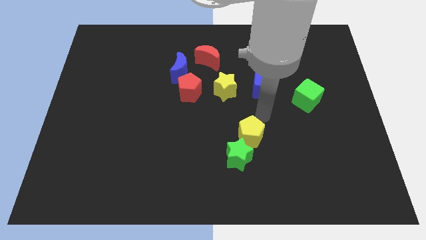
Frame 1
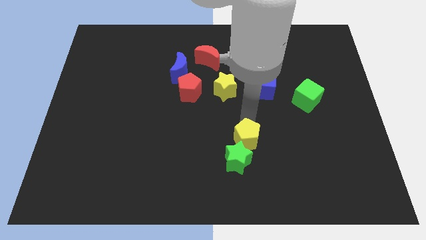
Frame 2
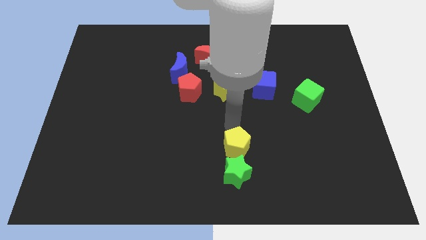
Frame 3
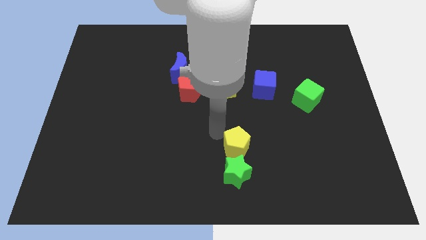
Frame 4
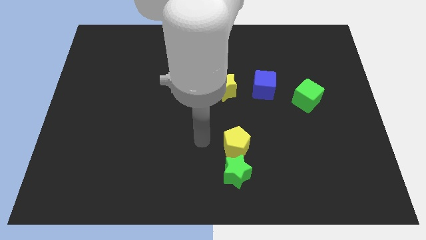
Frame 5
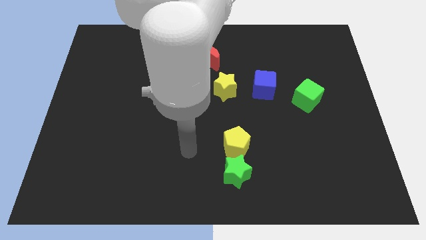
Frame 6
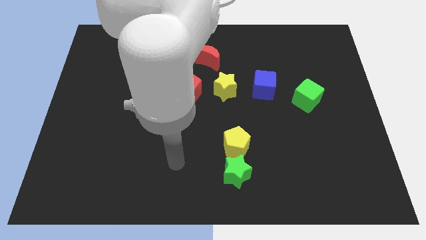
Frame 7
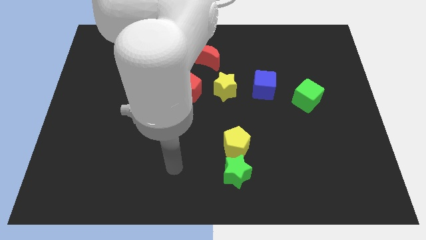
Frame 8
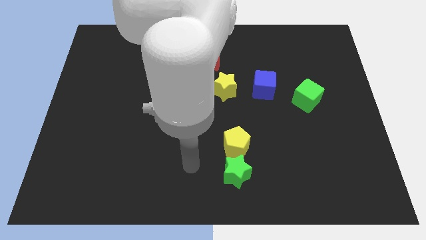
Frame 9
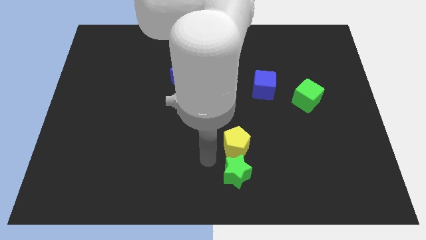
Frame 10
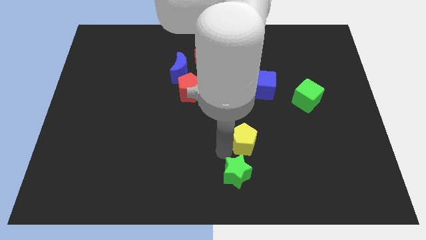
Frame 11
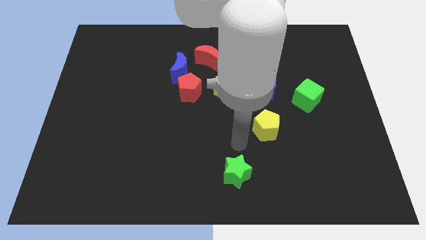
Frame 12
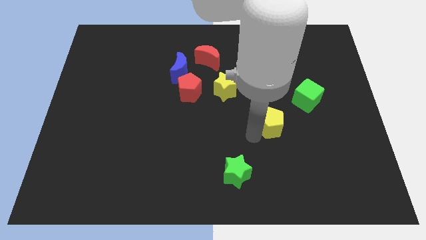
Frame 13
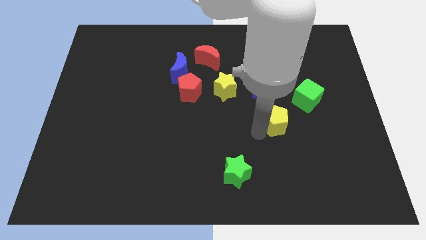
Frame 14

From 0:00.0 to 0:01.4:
separate the yellow pentagon away from the green star

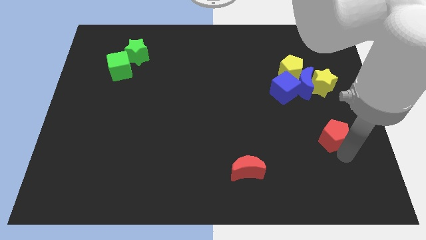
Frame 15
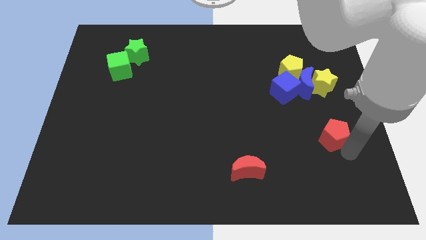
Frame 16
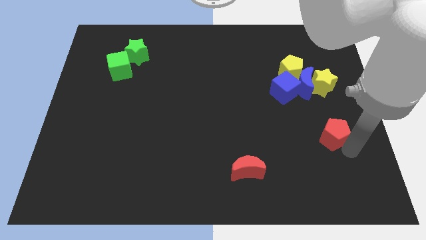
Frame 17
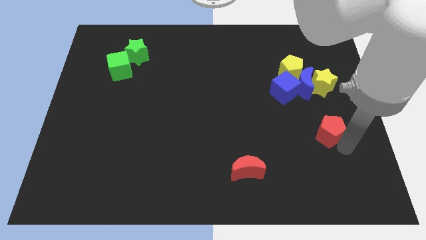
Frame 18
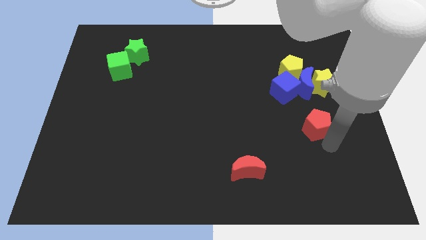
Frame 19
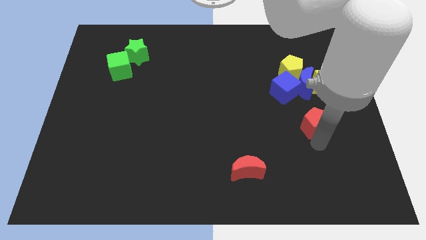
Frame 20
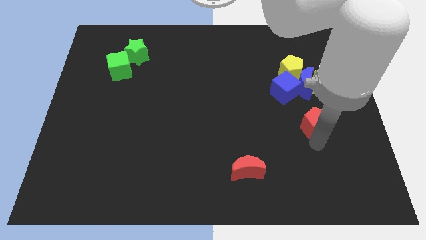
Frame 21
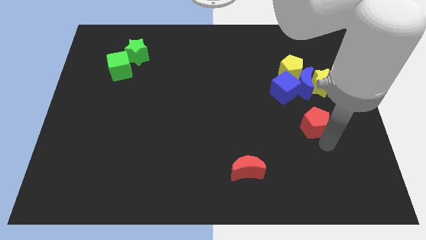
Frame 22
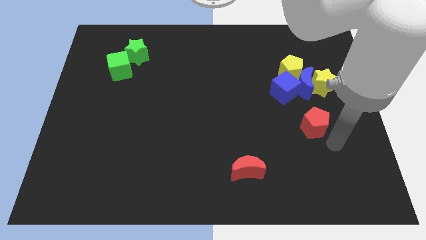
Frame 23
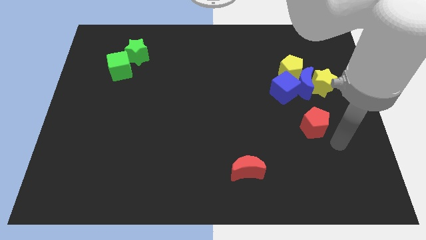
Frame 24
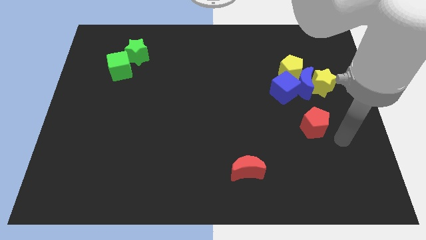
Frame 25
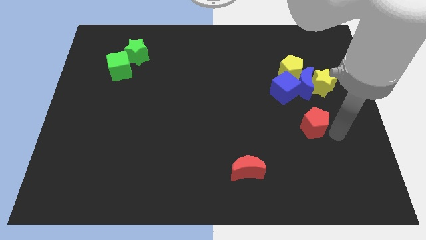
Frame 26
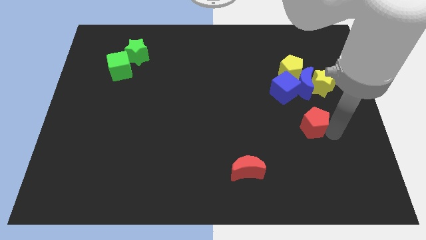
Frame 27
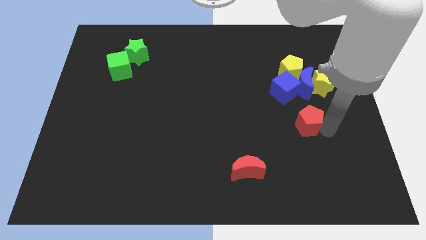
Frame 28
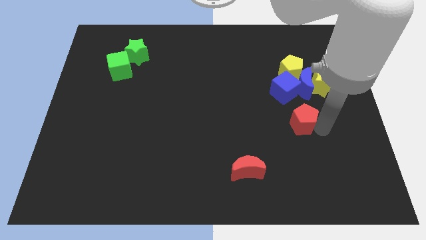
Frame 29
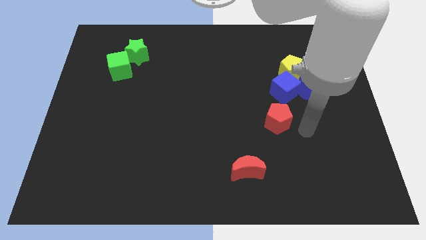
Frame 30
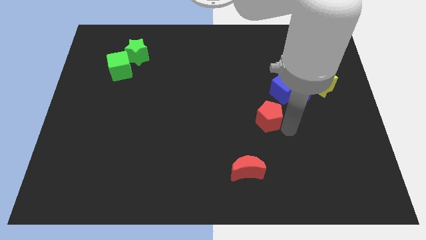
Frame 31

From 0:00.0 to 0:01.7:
place the red crescent at the bottom left side of blue cube

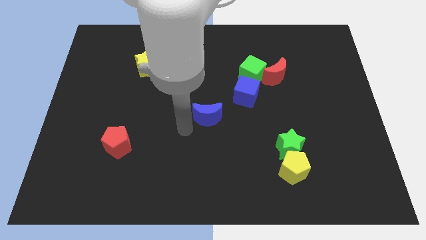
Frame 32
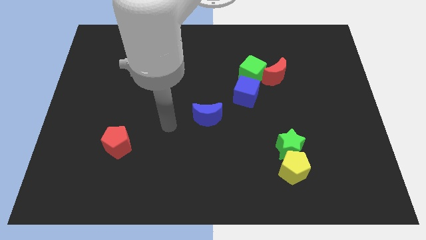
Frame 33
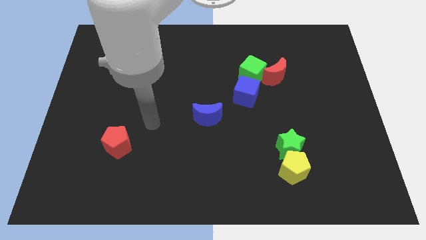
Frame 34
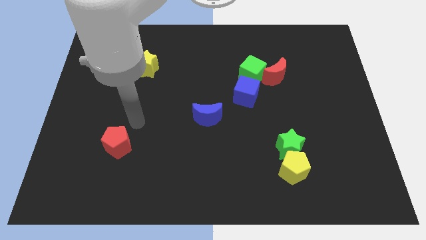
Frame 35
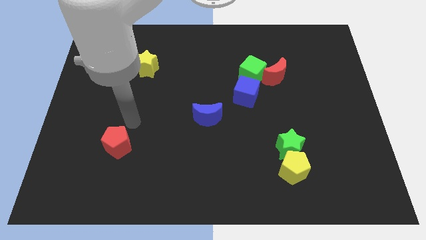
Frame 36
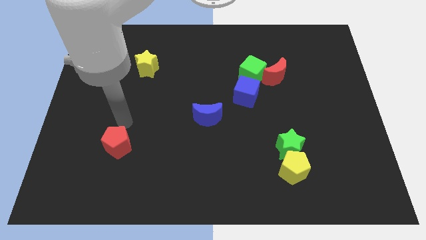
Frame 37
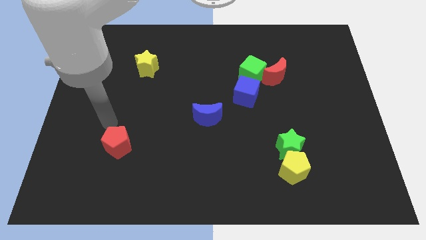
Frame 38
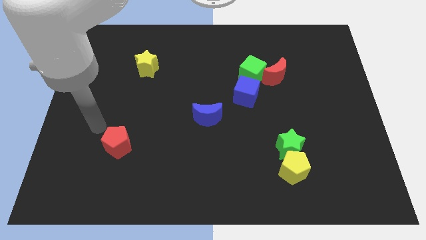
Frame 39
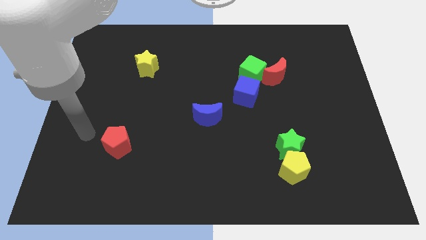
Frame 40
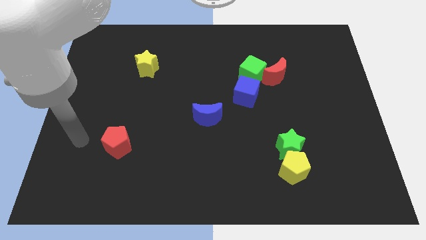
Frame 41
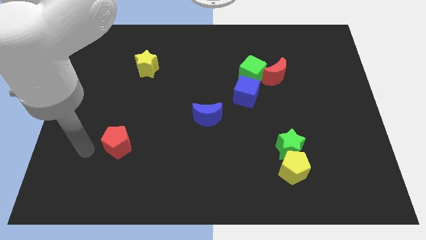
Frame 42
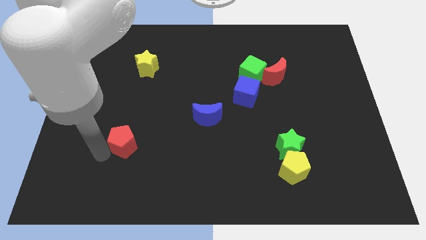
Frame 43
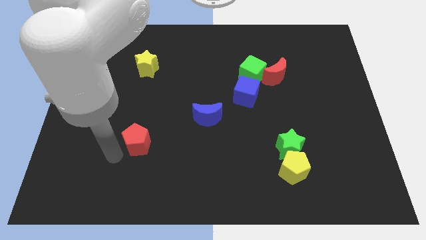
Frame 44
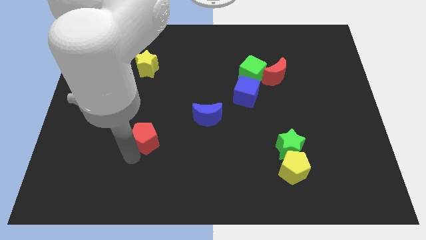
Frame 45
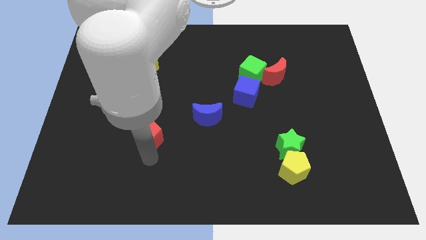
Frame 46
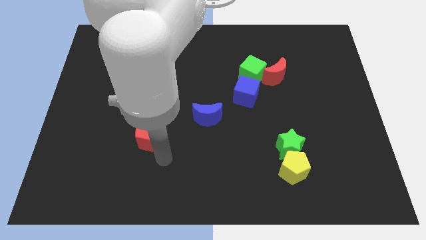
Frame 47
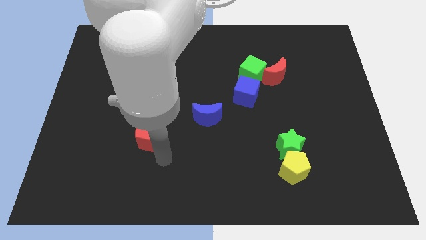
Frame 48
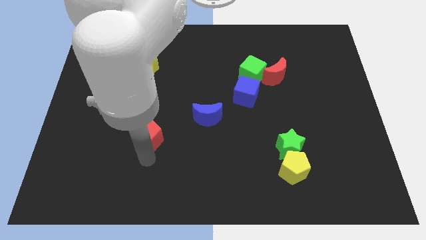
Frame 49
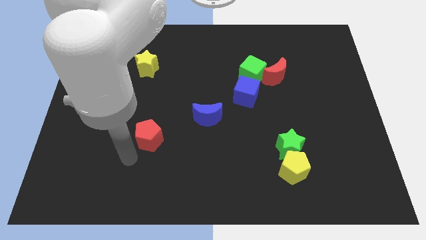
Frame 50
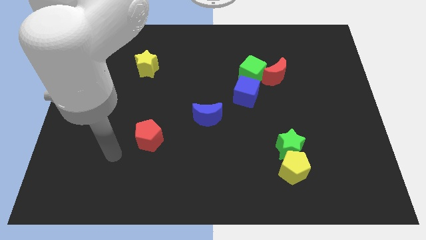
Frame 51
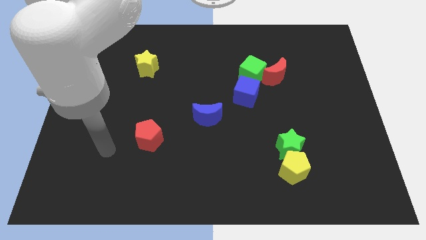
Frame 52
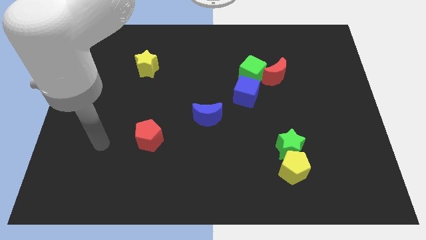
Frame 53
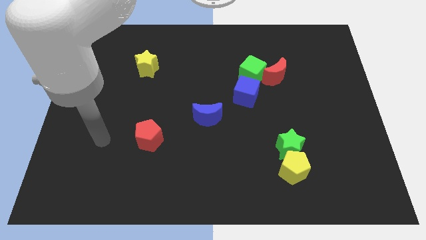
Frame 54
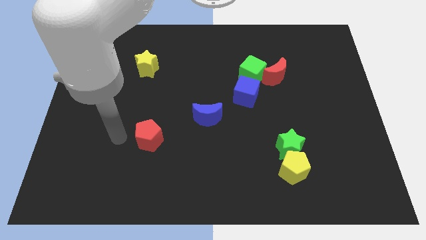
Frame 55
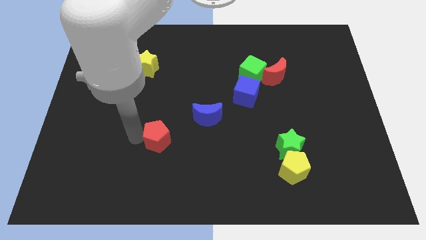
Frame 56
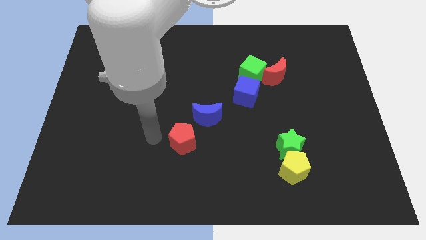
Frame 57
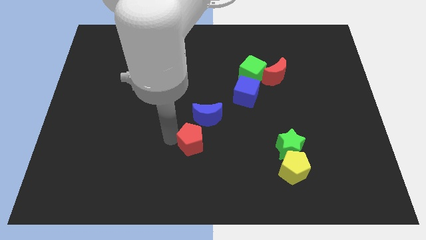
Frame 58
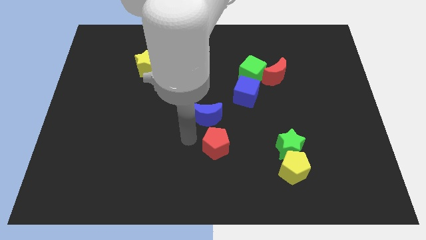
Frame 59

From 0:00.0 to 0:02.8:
place the red pentagon below the blue moon

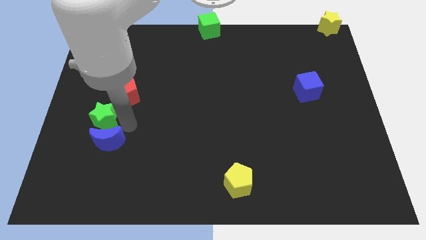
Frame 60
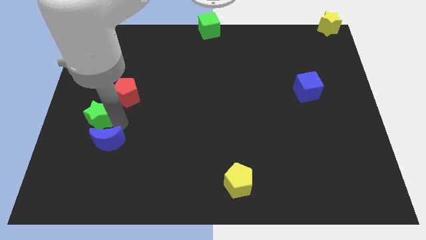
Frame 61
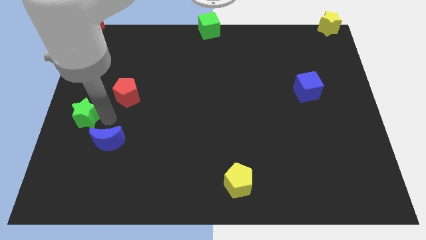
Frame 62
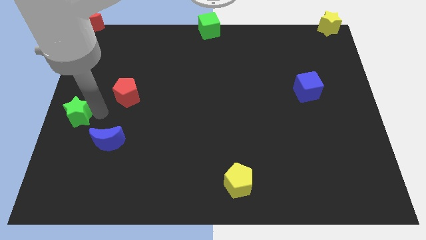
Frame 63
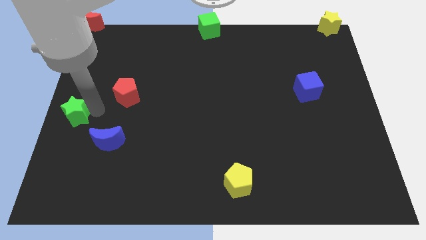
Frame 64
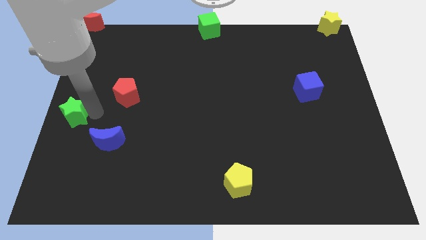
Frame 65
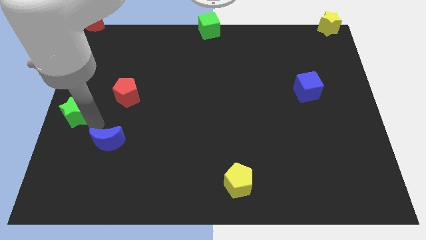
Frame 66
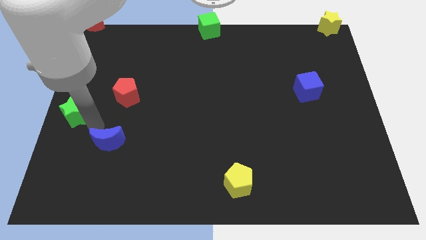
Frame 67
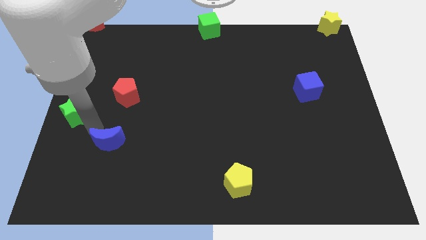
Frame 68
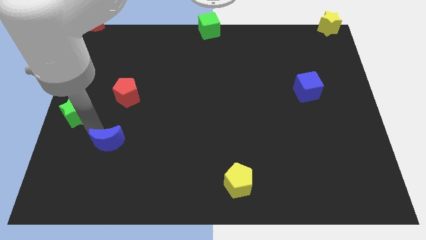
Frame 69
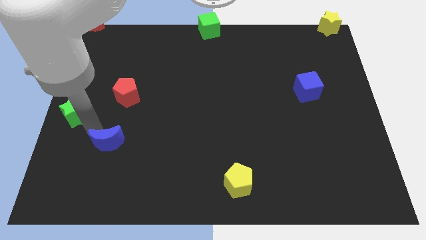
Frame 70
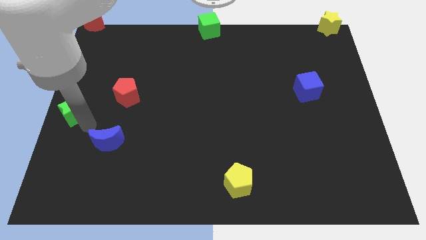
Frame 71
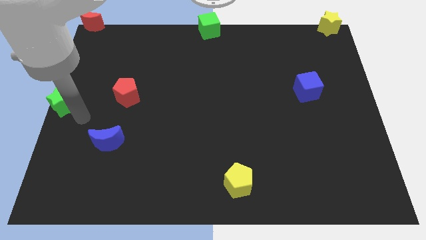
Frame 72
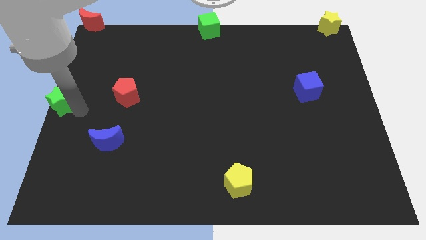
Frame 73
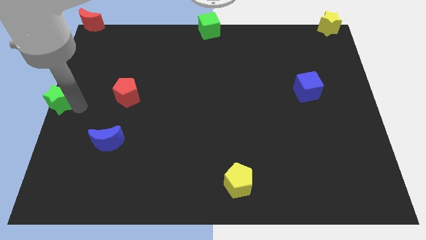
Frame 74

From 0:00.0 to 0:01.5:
push the green star to the left center of the board

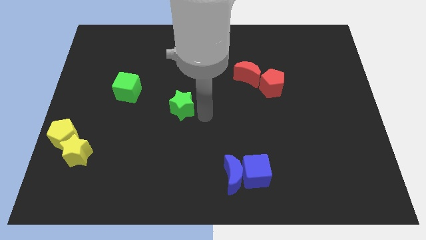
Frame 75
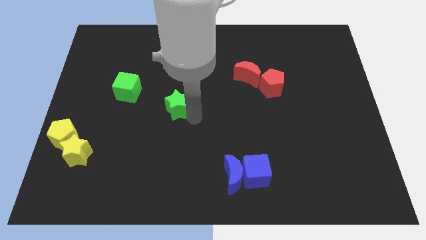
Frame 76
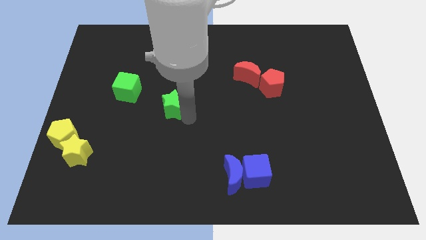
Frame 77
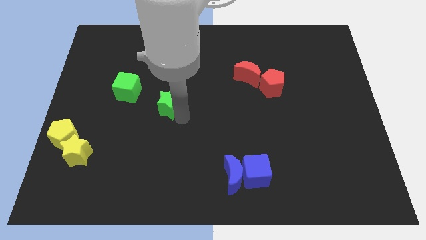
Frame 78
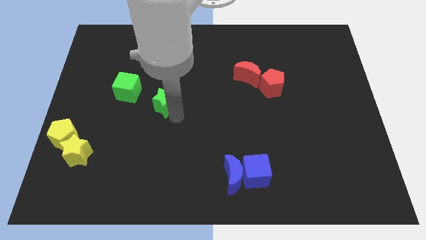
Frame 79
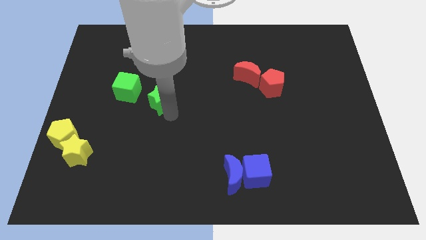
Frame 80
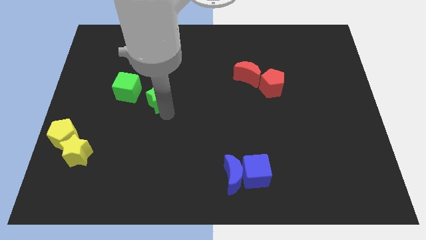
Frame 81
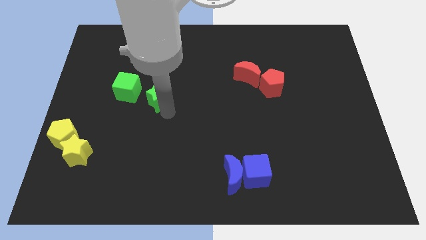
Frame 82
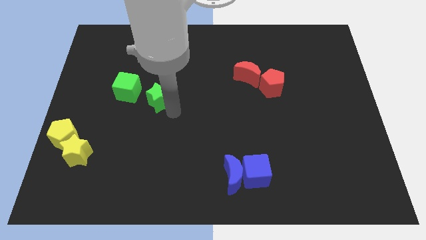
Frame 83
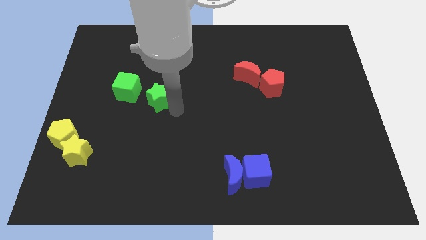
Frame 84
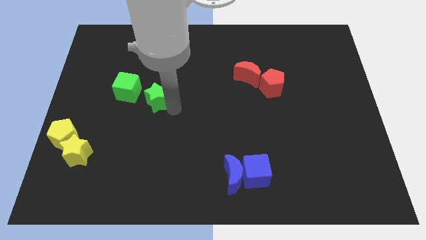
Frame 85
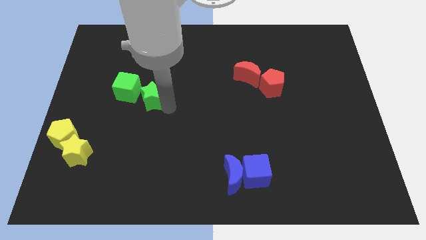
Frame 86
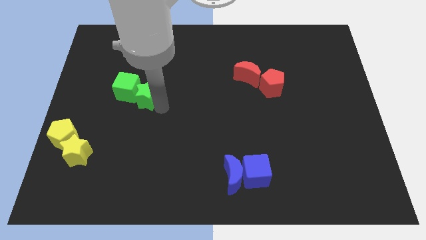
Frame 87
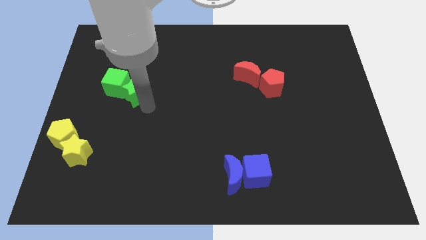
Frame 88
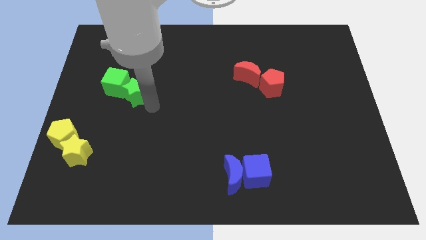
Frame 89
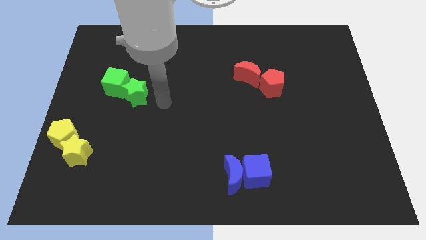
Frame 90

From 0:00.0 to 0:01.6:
push the green star into the green cube
